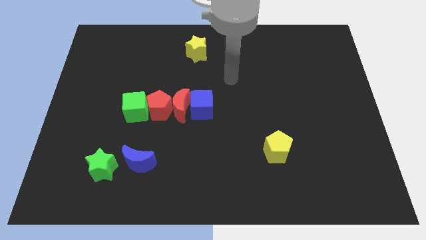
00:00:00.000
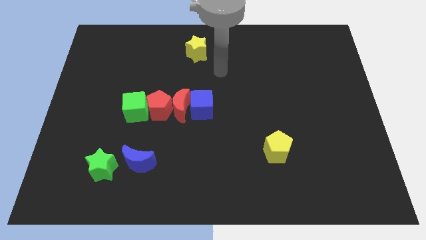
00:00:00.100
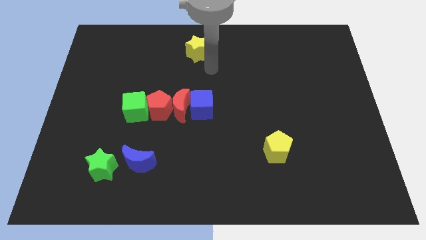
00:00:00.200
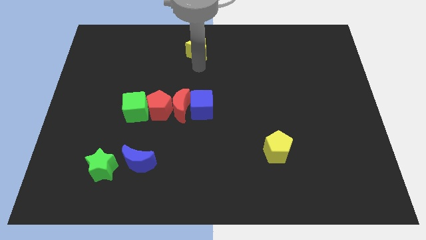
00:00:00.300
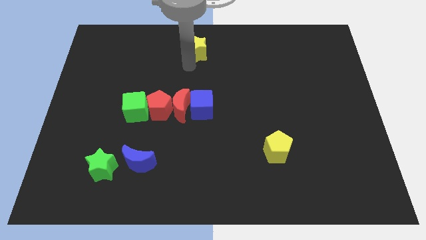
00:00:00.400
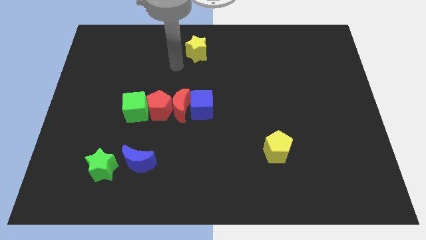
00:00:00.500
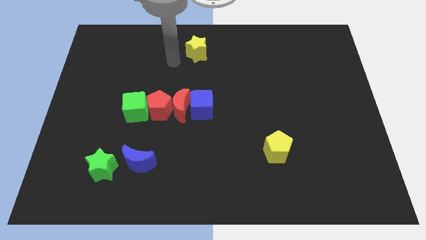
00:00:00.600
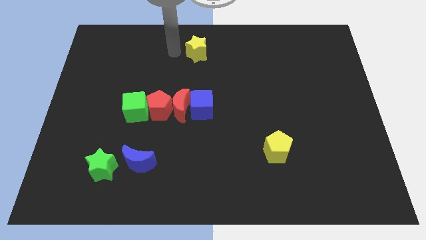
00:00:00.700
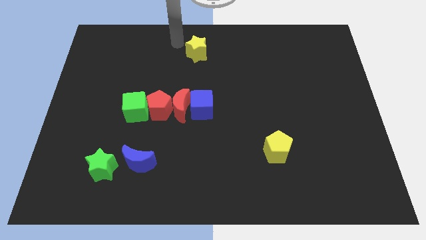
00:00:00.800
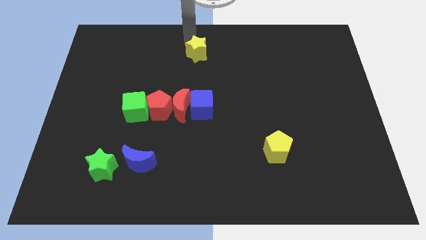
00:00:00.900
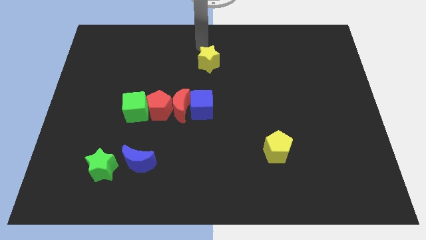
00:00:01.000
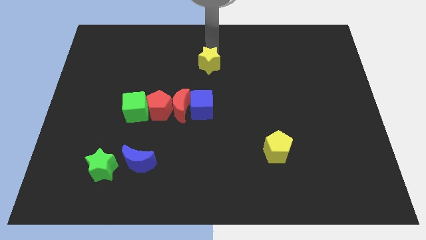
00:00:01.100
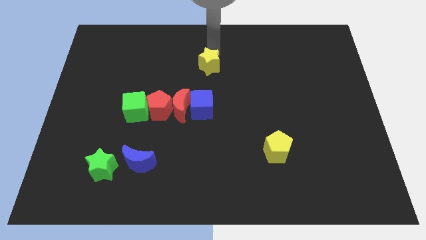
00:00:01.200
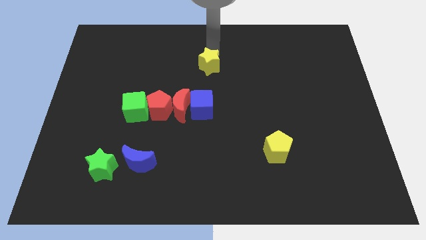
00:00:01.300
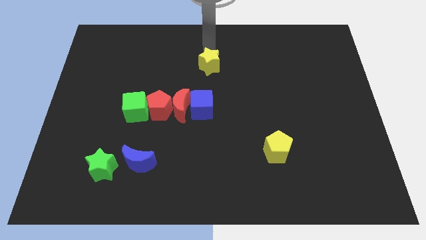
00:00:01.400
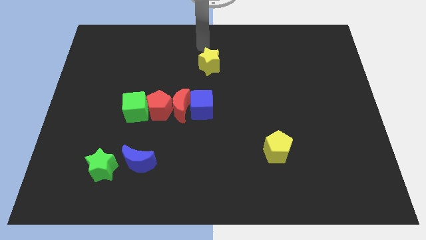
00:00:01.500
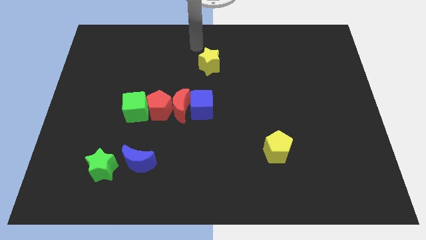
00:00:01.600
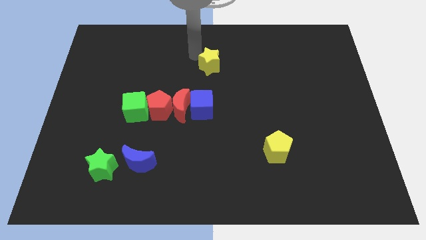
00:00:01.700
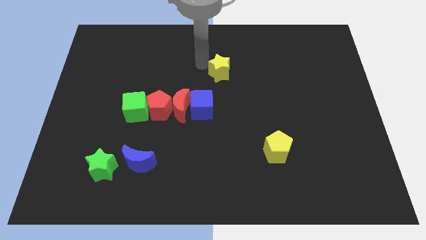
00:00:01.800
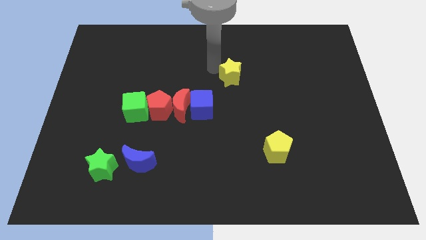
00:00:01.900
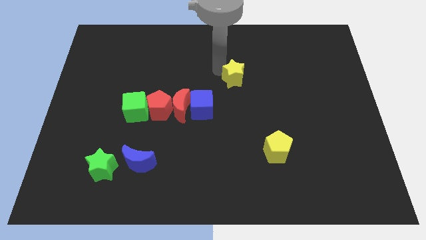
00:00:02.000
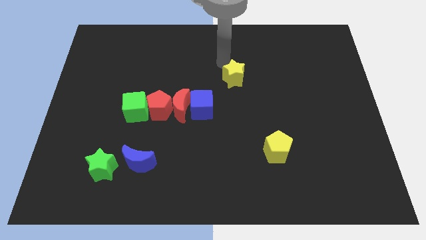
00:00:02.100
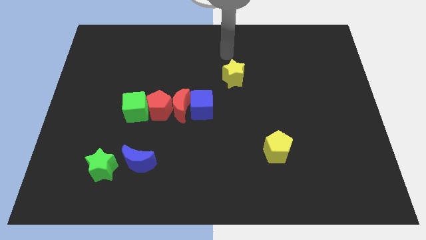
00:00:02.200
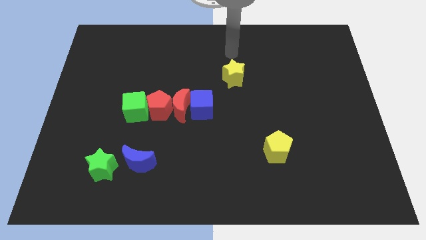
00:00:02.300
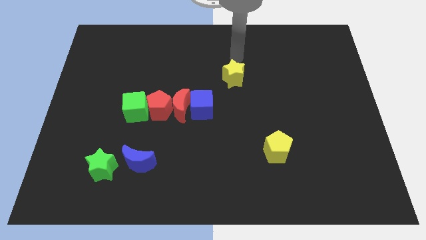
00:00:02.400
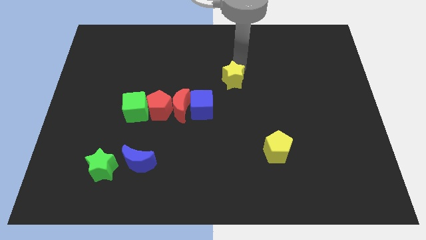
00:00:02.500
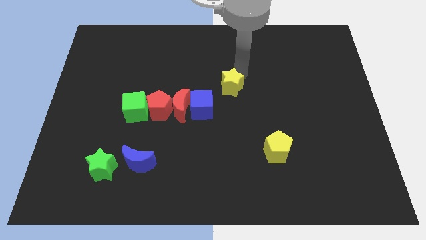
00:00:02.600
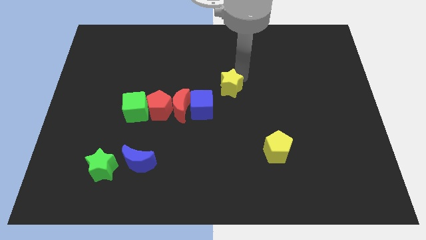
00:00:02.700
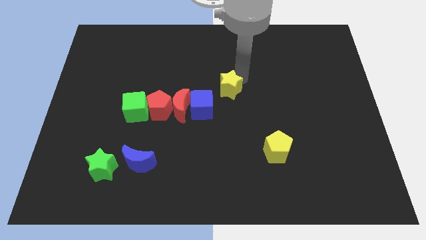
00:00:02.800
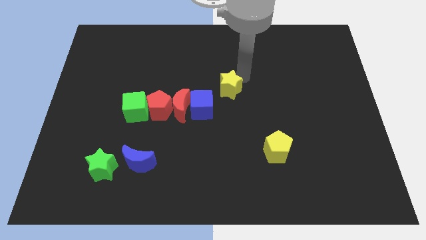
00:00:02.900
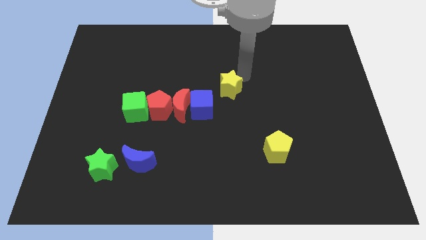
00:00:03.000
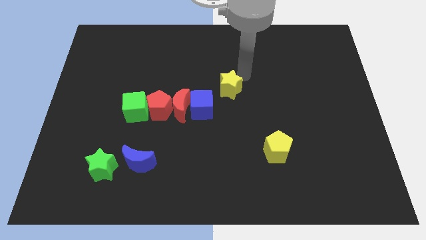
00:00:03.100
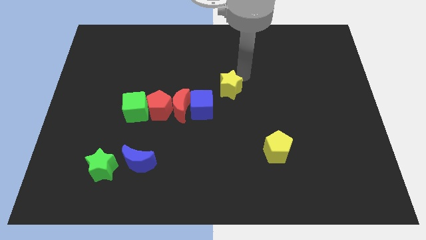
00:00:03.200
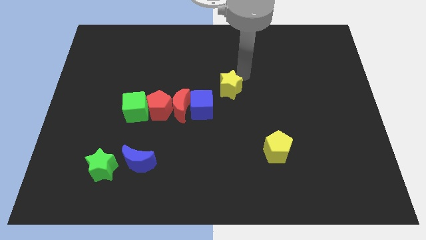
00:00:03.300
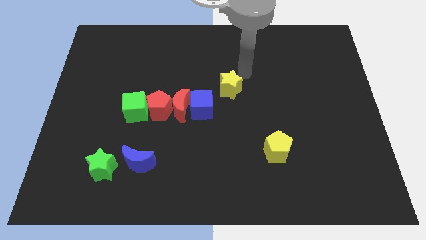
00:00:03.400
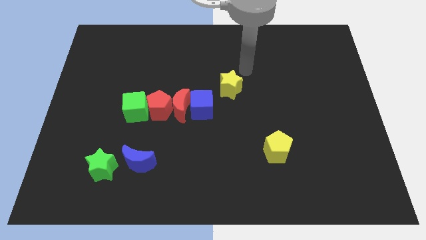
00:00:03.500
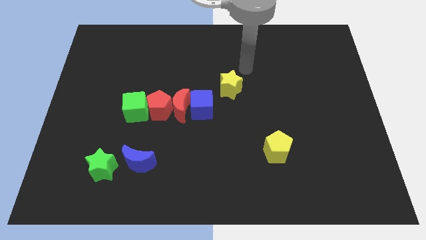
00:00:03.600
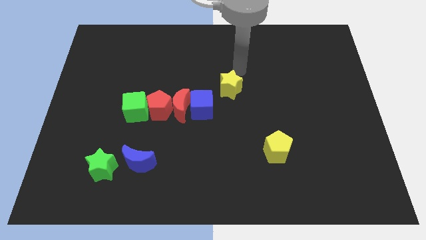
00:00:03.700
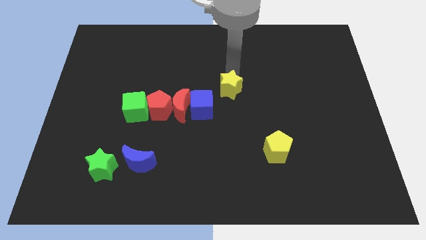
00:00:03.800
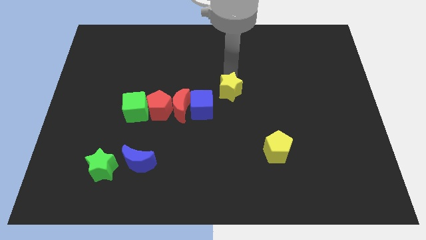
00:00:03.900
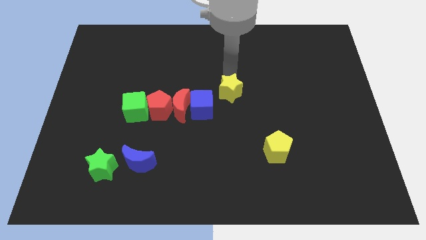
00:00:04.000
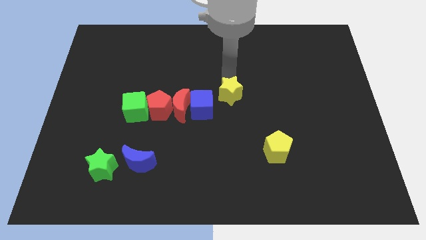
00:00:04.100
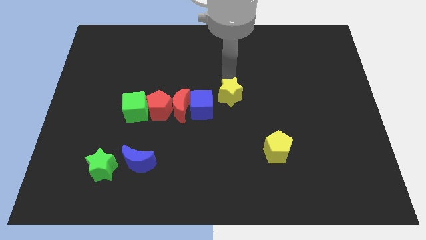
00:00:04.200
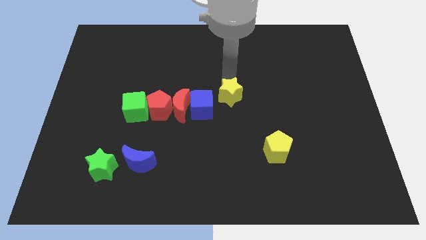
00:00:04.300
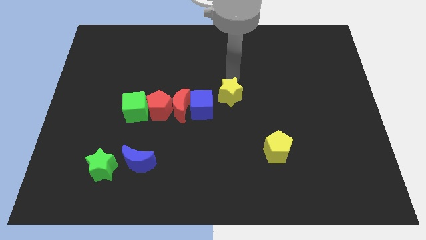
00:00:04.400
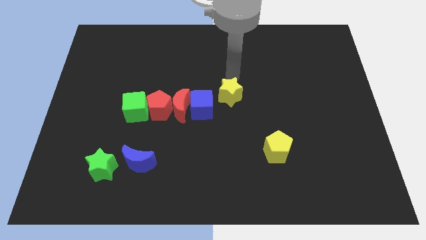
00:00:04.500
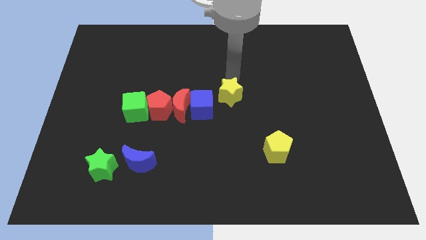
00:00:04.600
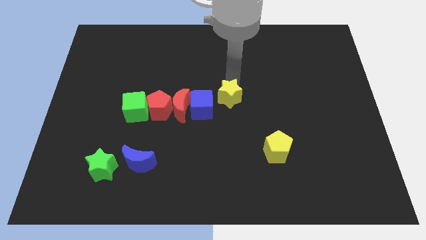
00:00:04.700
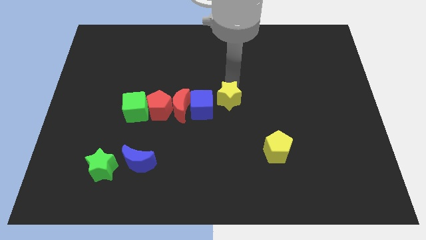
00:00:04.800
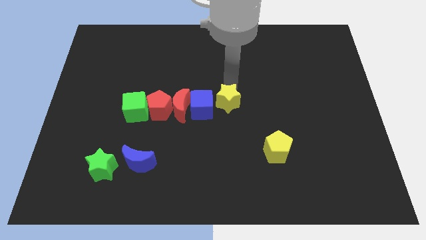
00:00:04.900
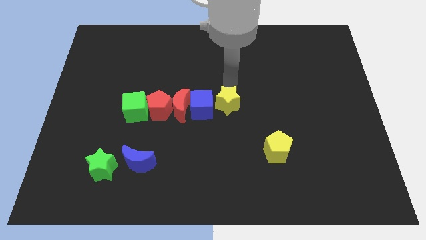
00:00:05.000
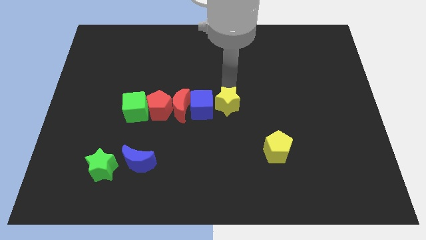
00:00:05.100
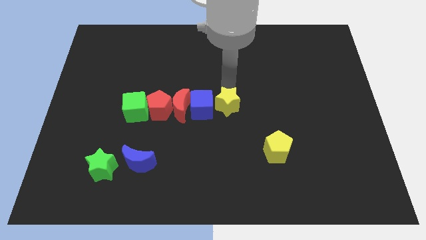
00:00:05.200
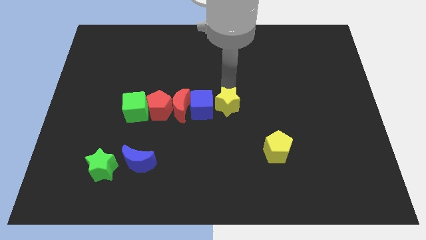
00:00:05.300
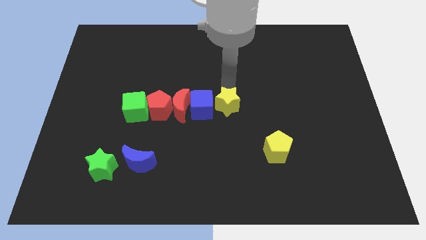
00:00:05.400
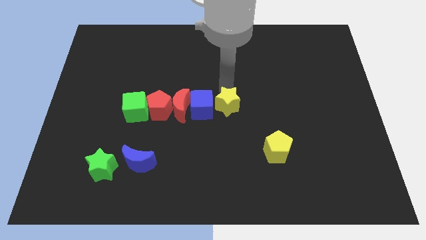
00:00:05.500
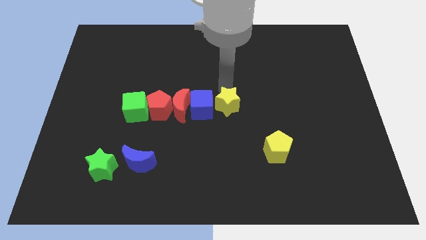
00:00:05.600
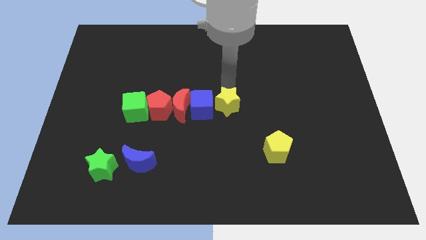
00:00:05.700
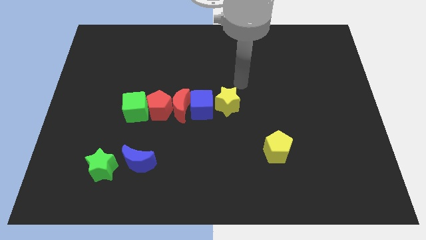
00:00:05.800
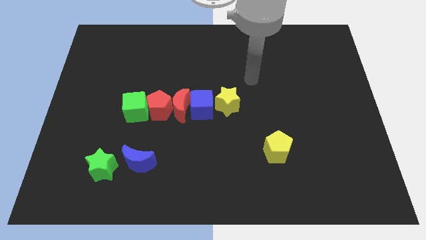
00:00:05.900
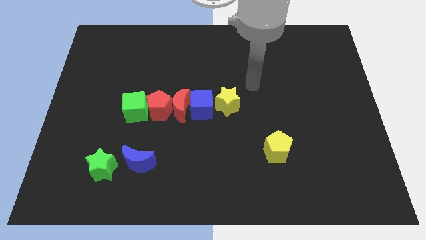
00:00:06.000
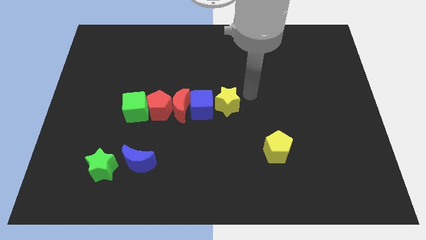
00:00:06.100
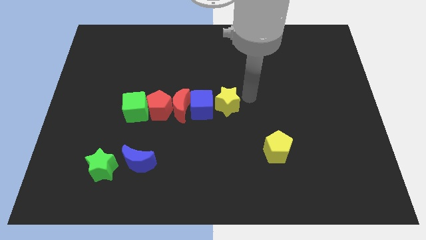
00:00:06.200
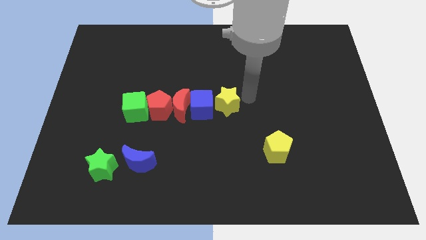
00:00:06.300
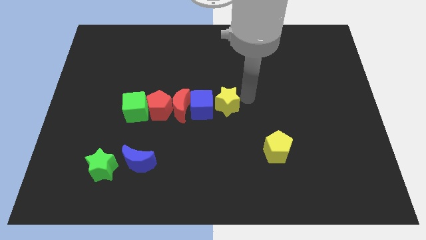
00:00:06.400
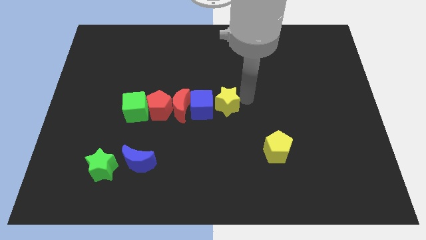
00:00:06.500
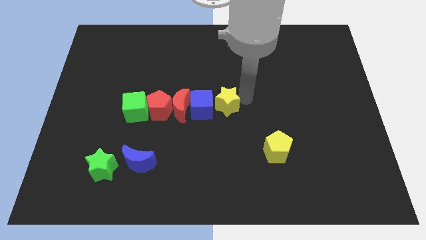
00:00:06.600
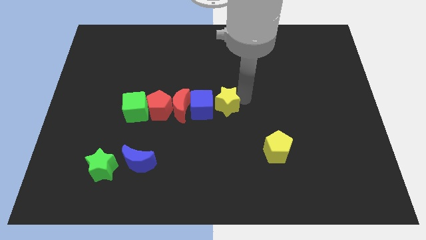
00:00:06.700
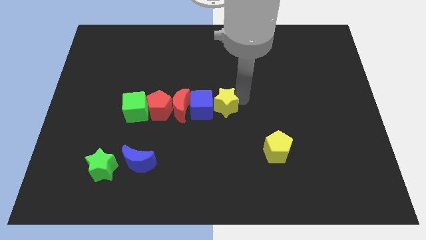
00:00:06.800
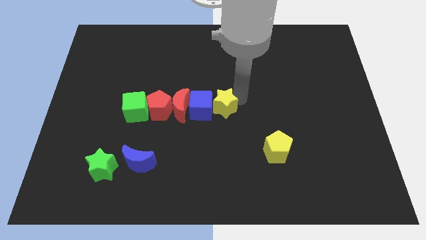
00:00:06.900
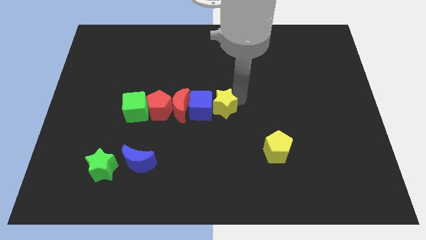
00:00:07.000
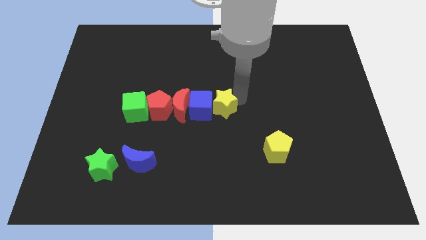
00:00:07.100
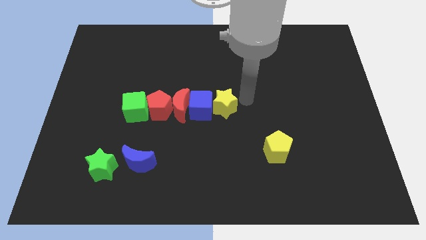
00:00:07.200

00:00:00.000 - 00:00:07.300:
move the yellow star into the right side of the horizontal line of blocks

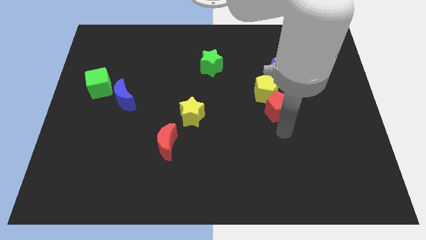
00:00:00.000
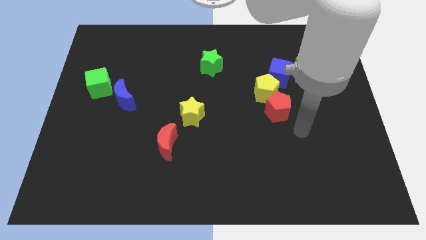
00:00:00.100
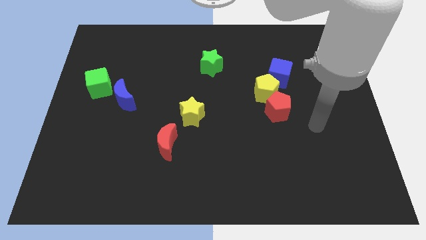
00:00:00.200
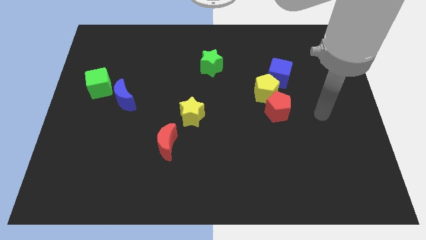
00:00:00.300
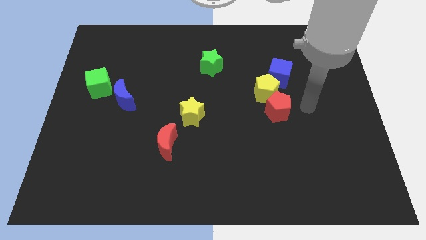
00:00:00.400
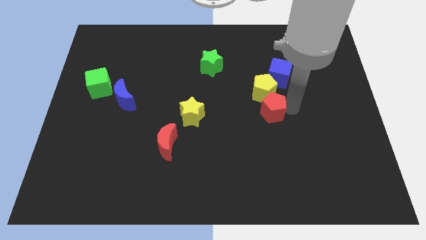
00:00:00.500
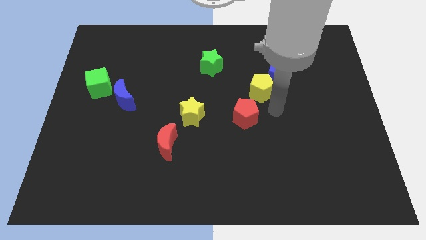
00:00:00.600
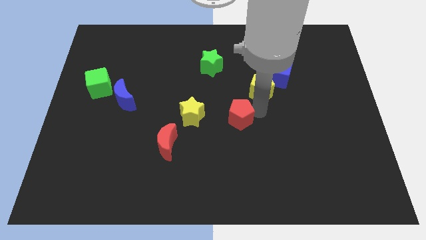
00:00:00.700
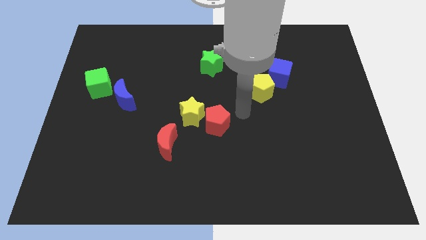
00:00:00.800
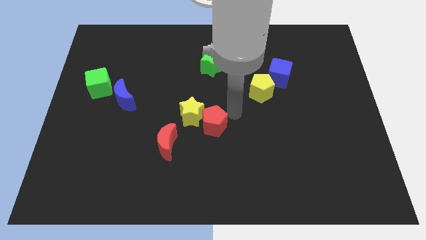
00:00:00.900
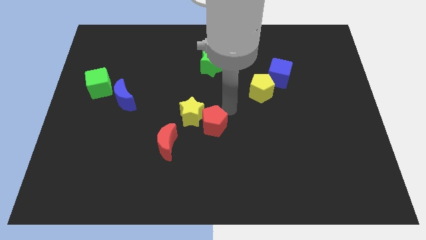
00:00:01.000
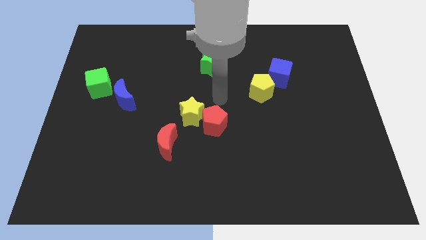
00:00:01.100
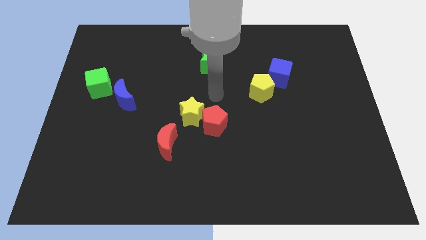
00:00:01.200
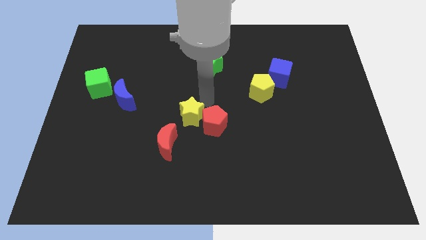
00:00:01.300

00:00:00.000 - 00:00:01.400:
place the red pentagon close to the yellow star

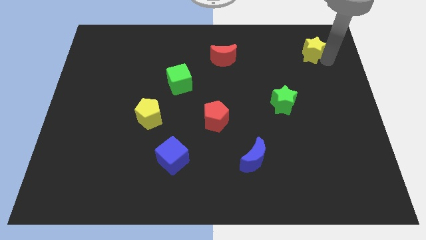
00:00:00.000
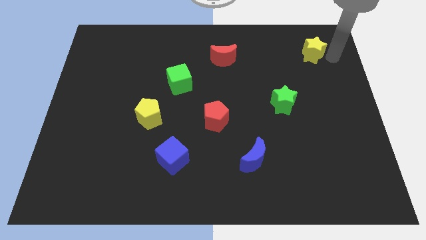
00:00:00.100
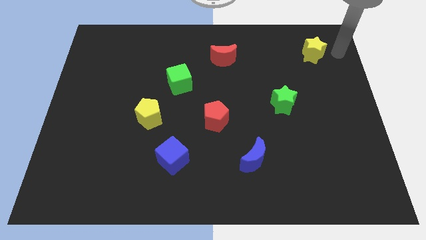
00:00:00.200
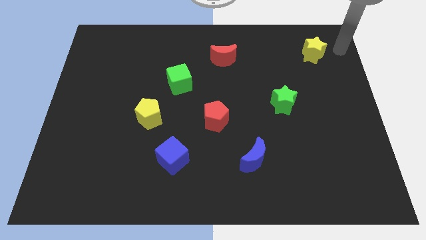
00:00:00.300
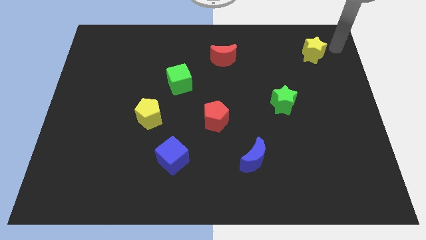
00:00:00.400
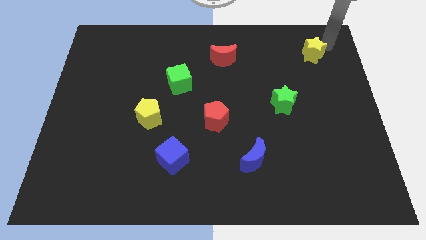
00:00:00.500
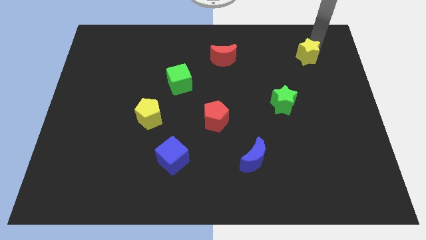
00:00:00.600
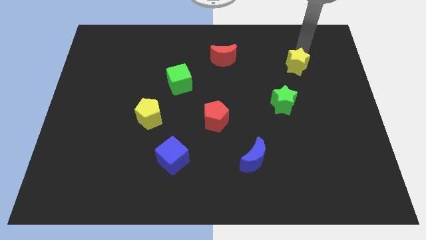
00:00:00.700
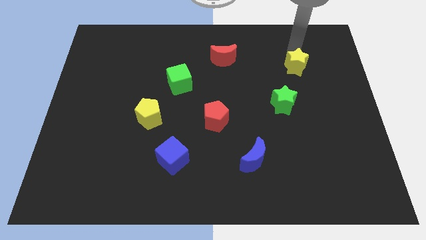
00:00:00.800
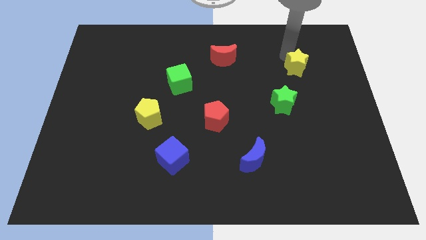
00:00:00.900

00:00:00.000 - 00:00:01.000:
push yellow star towards green star
